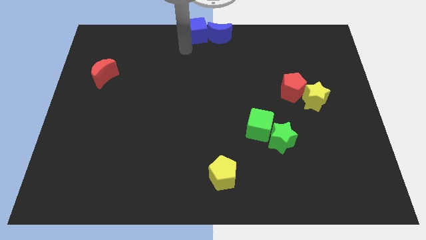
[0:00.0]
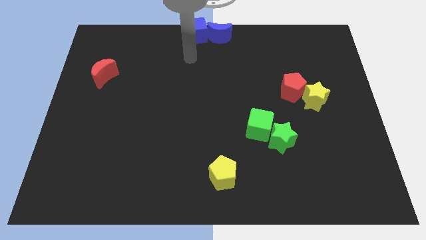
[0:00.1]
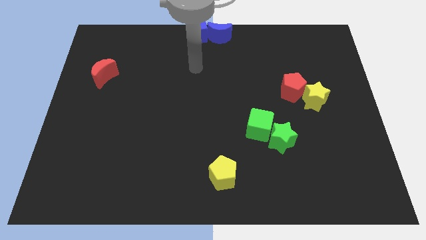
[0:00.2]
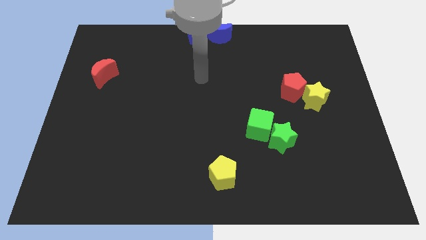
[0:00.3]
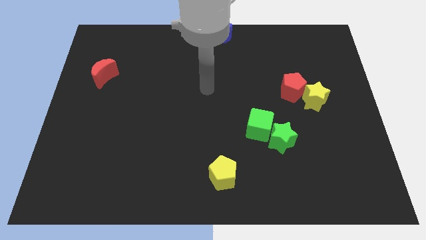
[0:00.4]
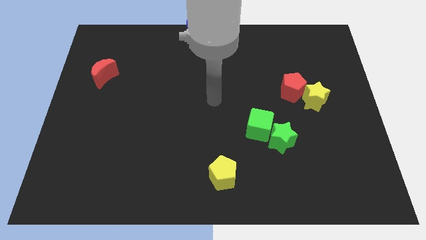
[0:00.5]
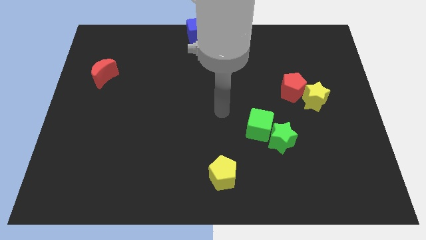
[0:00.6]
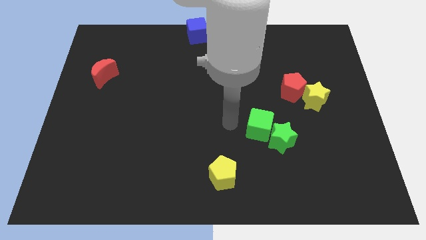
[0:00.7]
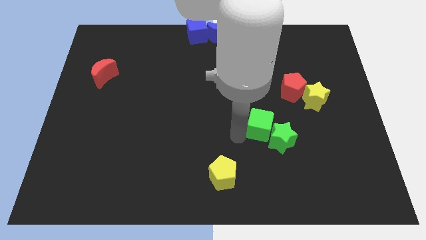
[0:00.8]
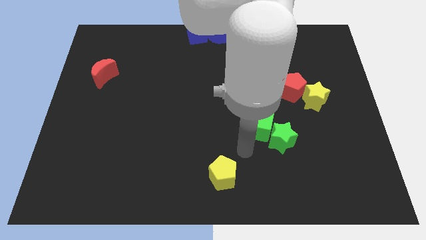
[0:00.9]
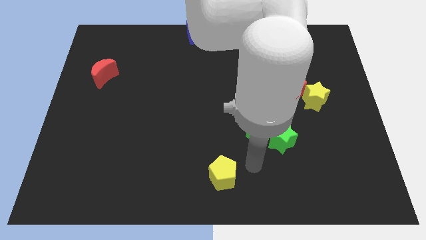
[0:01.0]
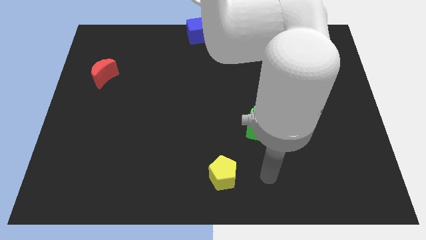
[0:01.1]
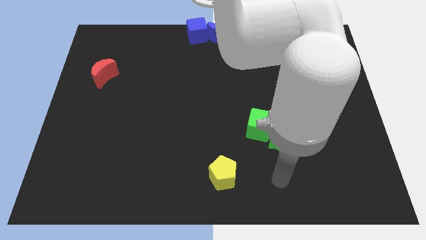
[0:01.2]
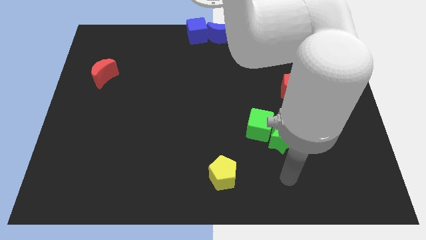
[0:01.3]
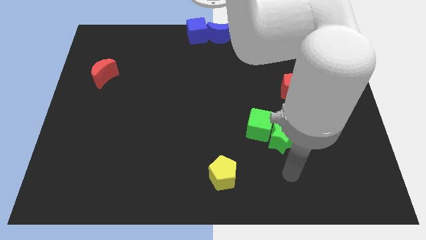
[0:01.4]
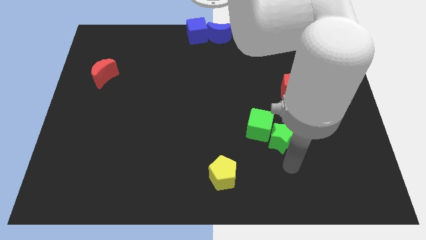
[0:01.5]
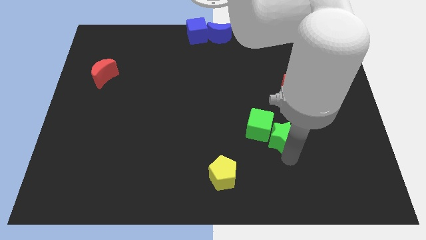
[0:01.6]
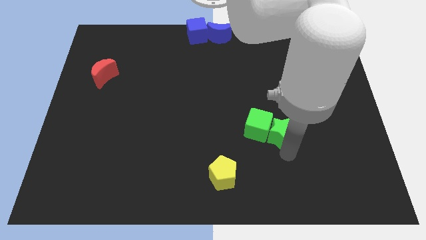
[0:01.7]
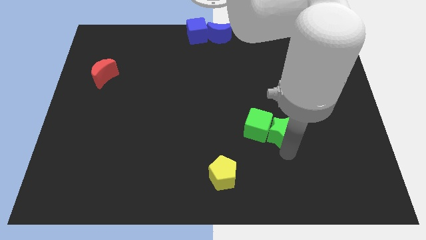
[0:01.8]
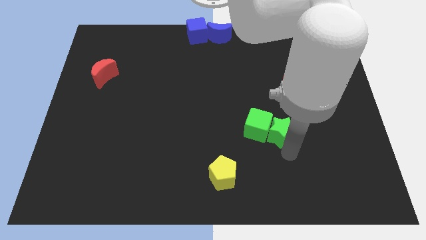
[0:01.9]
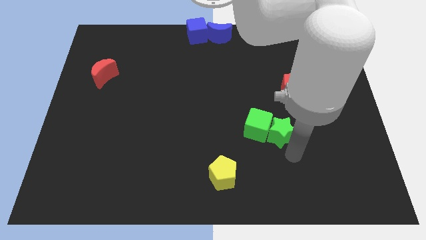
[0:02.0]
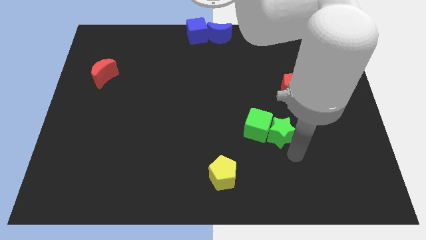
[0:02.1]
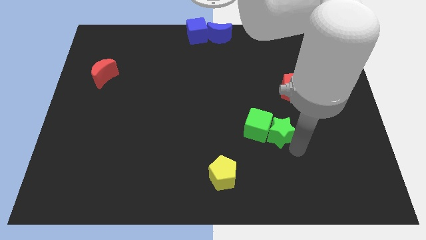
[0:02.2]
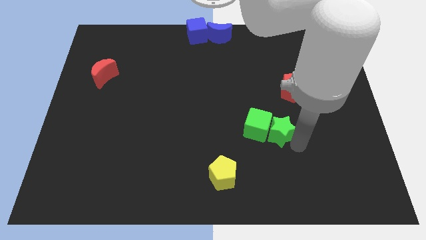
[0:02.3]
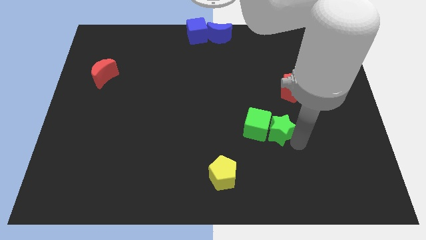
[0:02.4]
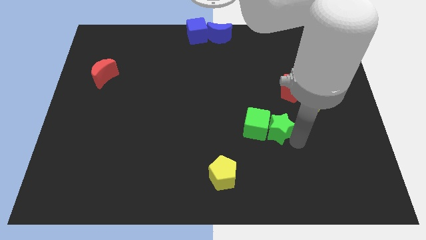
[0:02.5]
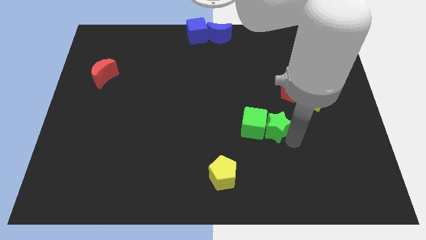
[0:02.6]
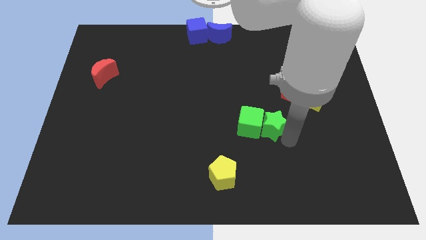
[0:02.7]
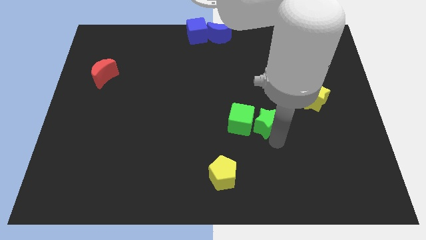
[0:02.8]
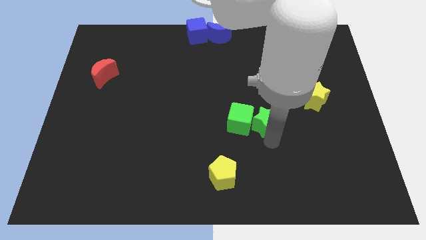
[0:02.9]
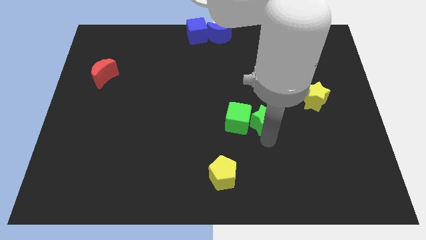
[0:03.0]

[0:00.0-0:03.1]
push both the green blocks towards the center of the board

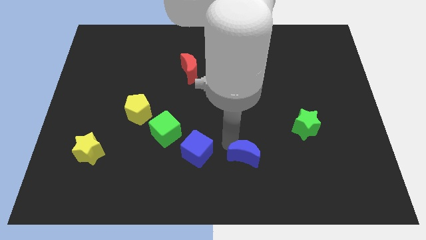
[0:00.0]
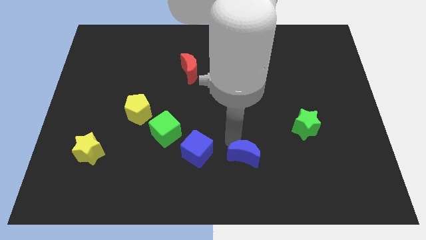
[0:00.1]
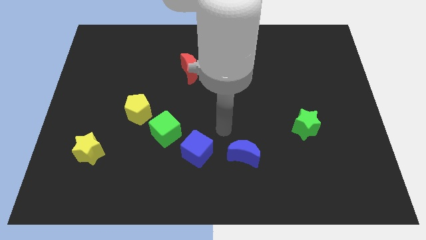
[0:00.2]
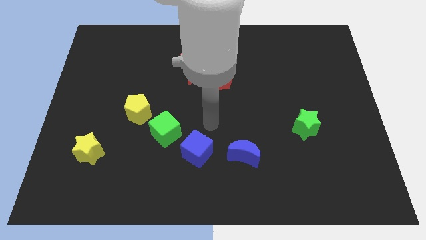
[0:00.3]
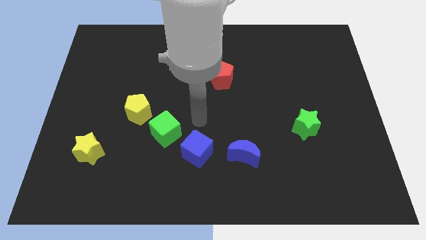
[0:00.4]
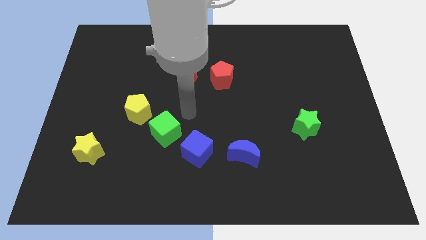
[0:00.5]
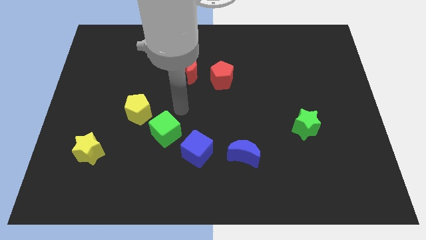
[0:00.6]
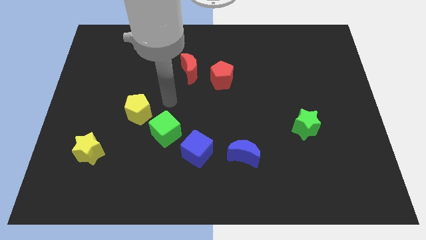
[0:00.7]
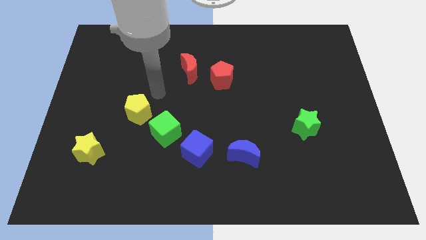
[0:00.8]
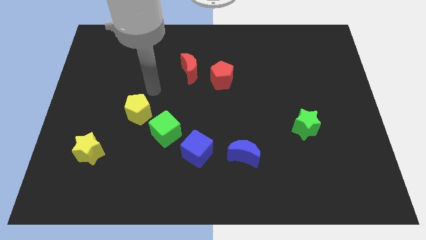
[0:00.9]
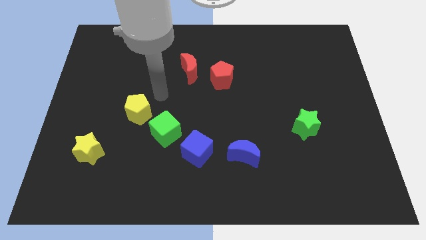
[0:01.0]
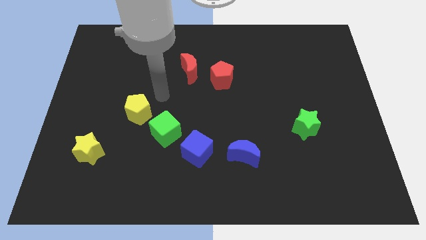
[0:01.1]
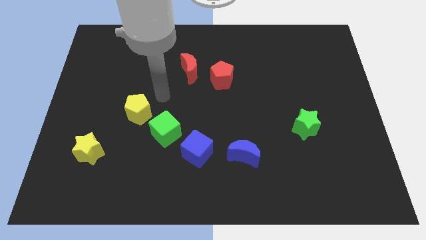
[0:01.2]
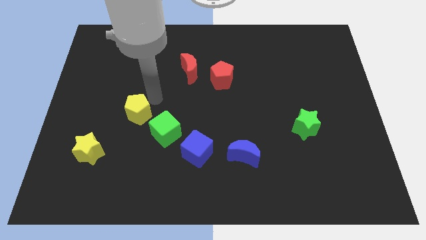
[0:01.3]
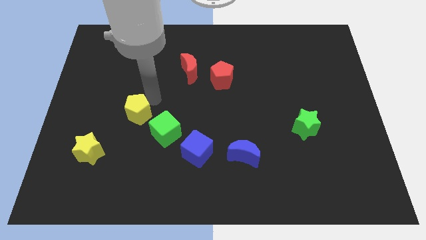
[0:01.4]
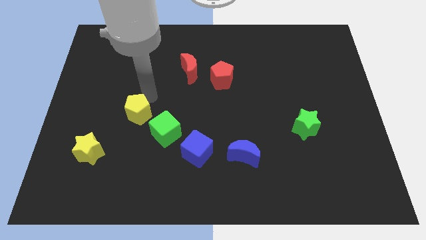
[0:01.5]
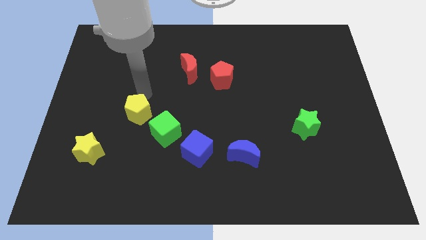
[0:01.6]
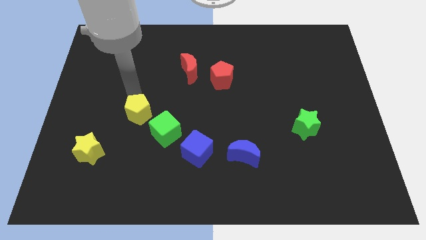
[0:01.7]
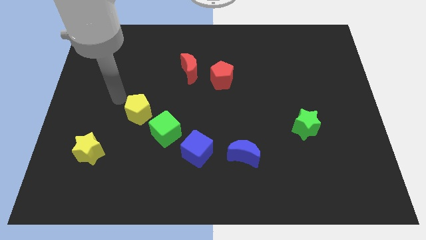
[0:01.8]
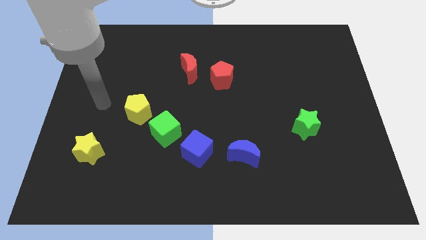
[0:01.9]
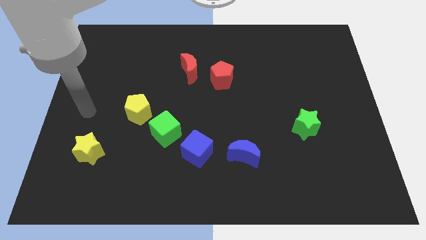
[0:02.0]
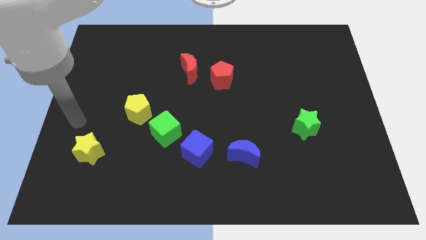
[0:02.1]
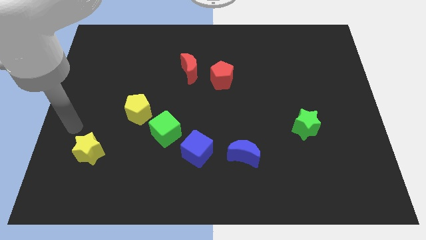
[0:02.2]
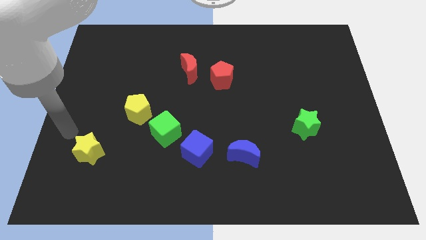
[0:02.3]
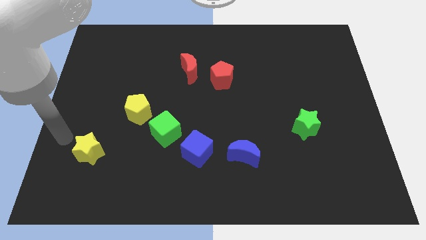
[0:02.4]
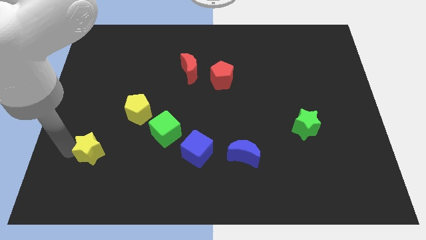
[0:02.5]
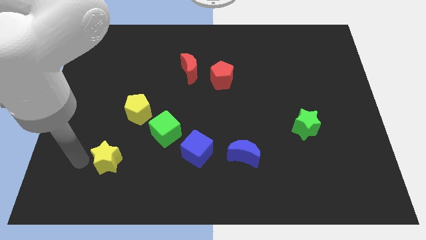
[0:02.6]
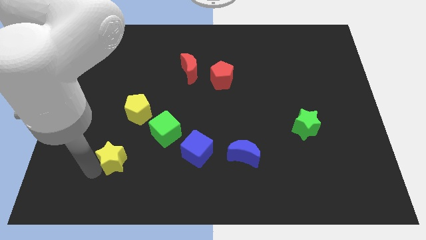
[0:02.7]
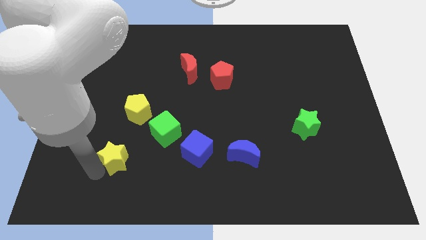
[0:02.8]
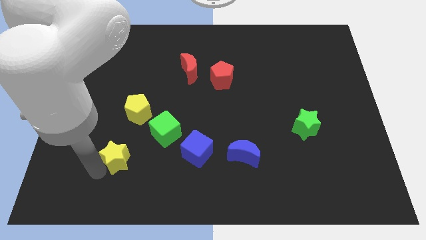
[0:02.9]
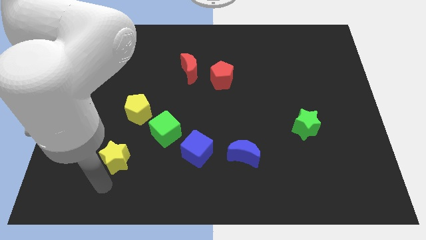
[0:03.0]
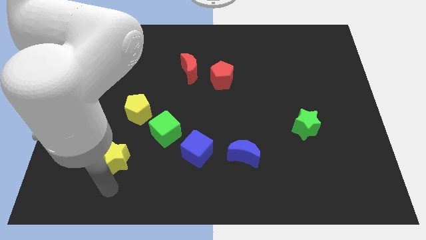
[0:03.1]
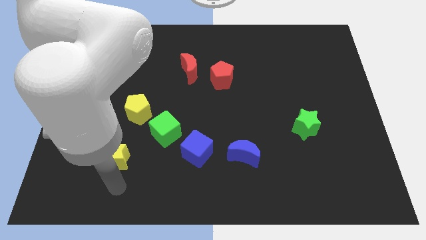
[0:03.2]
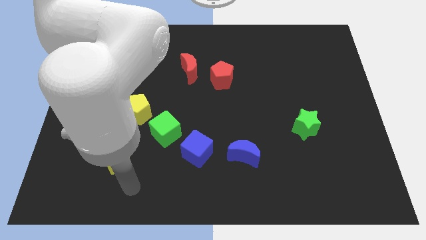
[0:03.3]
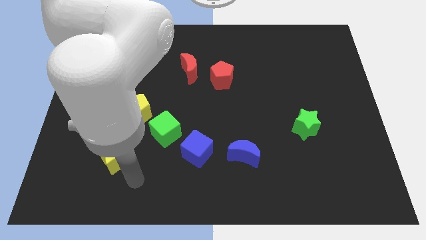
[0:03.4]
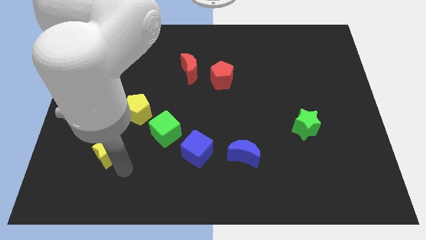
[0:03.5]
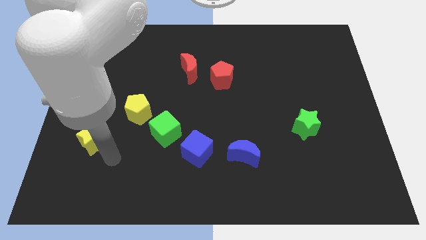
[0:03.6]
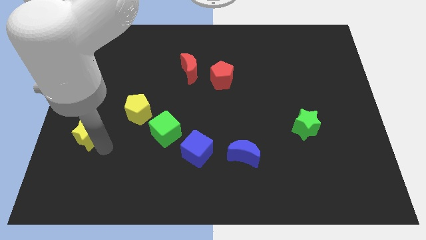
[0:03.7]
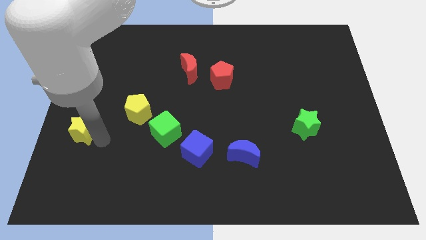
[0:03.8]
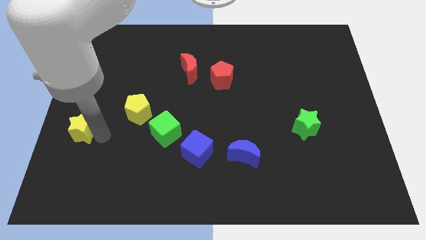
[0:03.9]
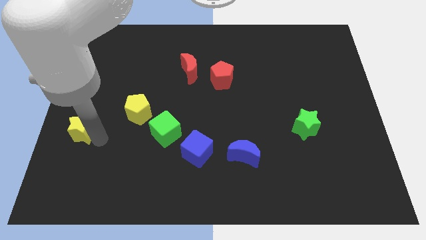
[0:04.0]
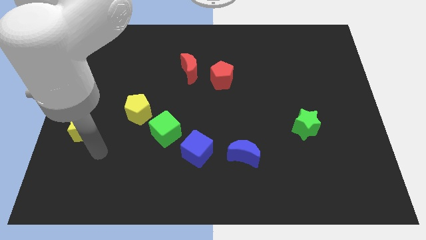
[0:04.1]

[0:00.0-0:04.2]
move yellow star towards the center left

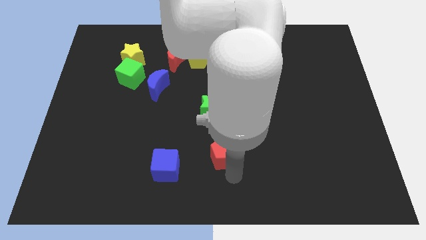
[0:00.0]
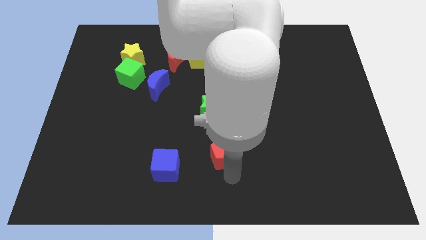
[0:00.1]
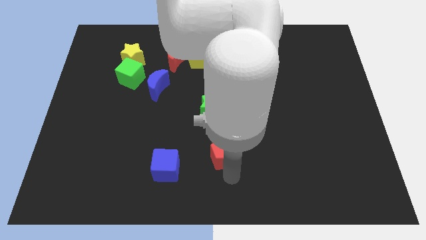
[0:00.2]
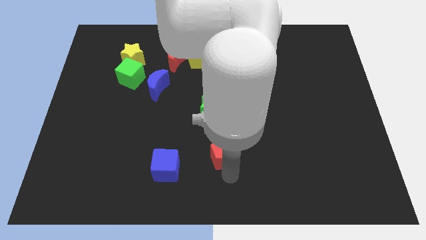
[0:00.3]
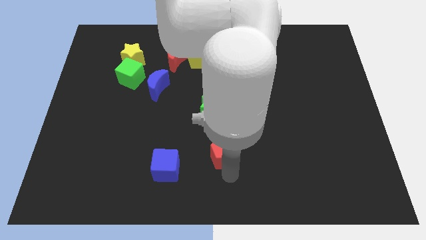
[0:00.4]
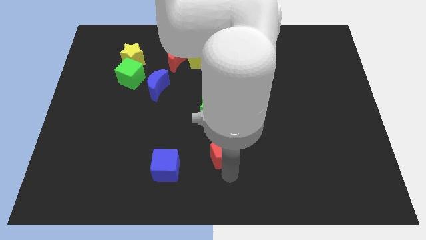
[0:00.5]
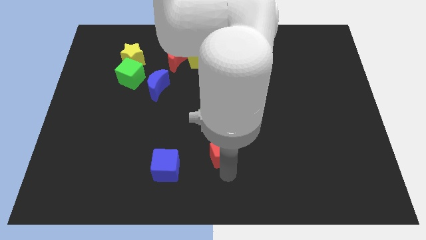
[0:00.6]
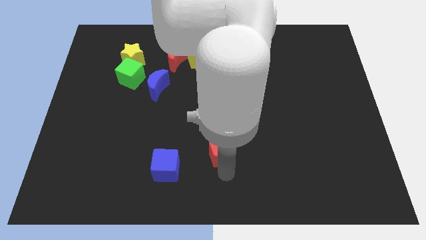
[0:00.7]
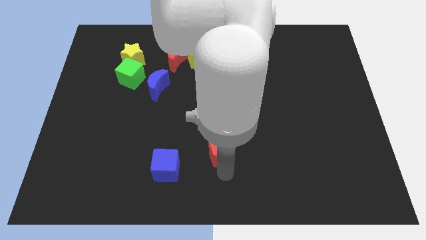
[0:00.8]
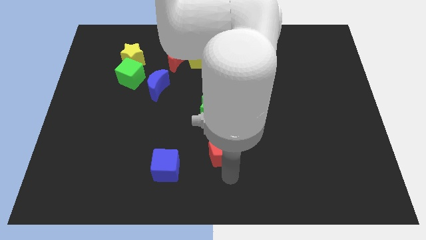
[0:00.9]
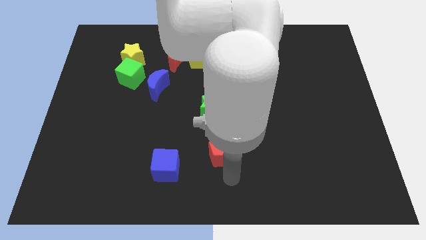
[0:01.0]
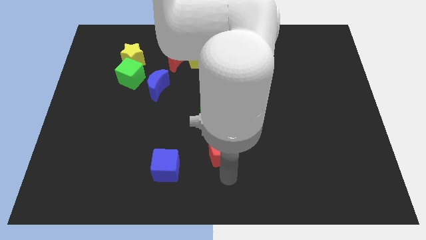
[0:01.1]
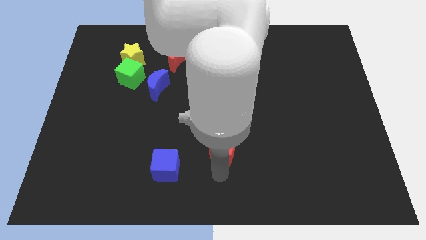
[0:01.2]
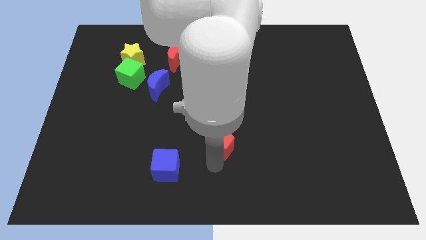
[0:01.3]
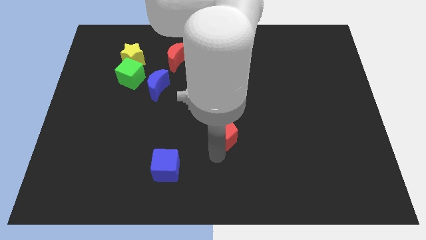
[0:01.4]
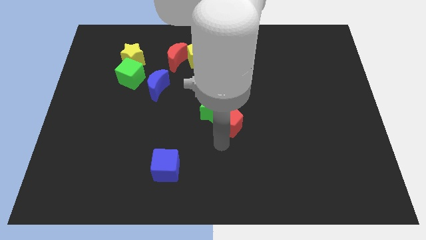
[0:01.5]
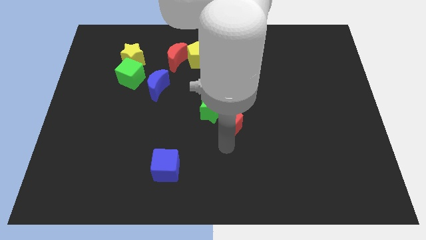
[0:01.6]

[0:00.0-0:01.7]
push the red pentagon up slightly
